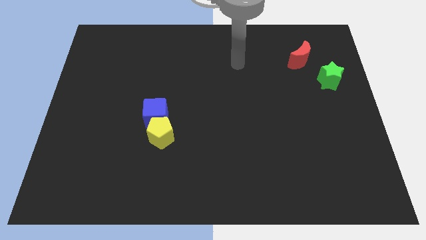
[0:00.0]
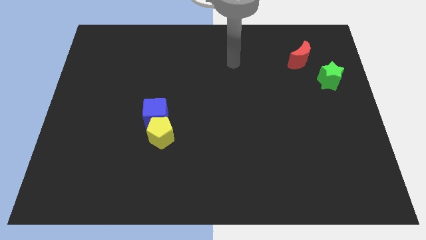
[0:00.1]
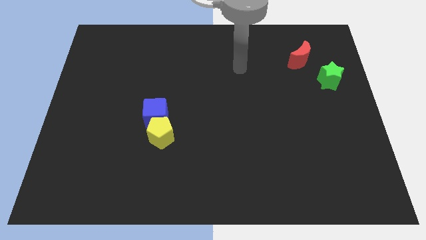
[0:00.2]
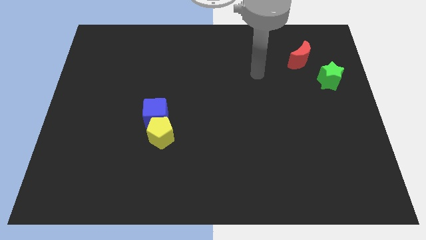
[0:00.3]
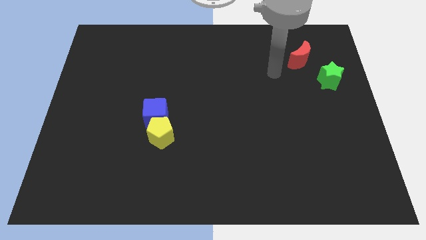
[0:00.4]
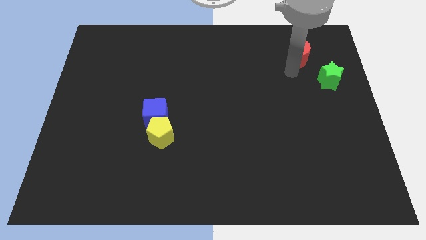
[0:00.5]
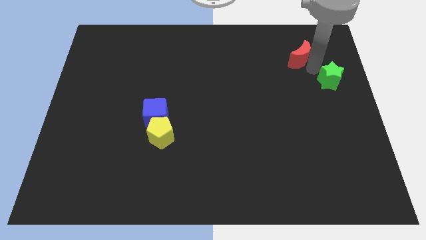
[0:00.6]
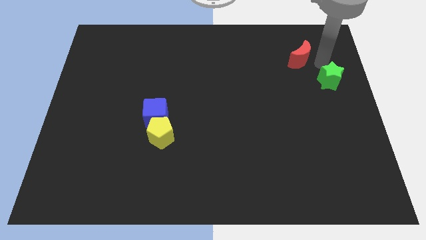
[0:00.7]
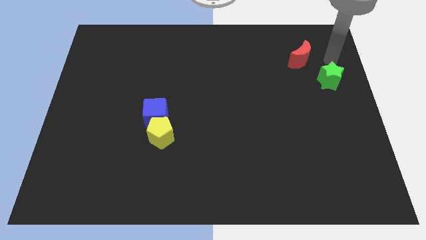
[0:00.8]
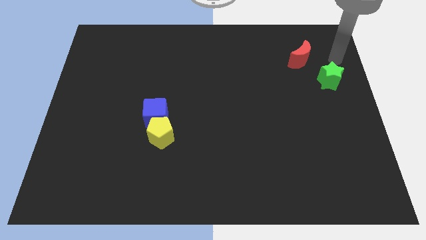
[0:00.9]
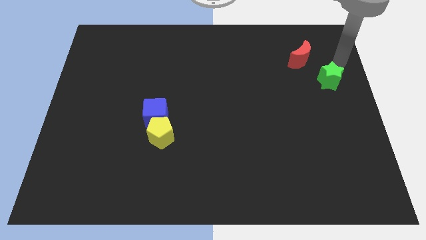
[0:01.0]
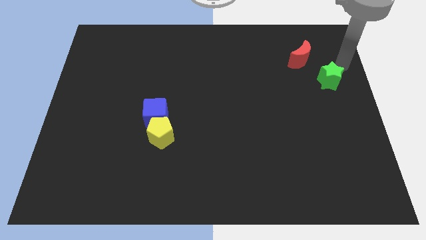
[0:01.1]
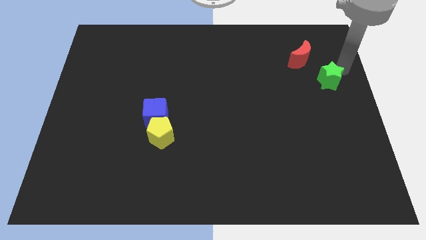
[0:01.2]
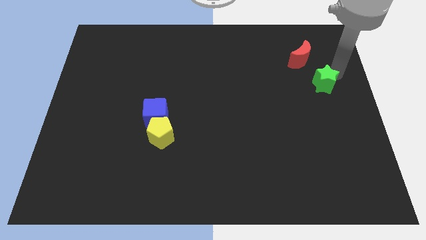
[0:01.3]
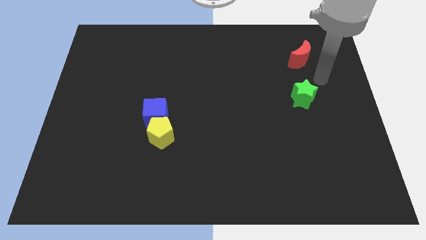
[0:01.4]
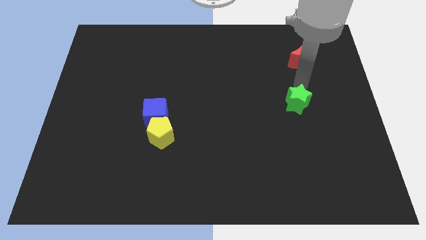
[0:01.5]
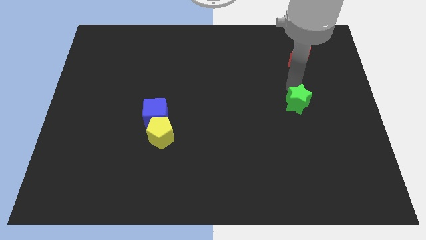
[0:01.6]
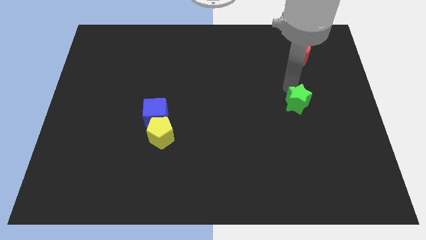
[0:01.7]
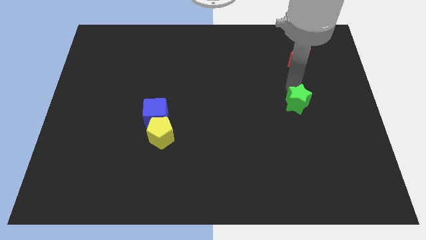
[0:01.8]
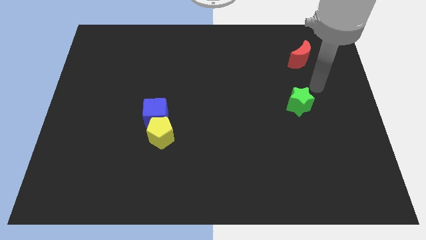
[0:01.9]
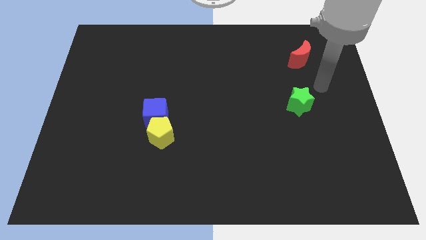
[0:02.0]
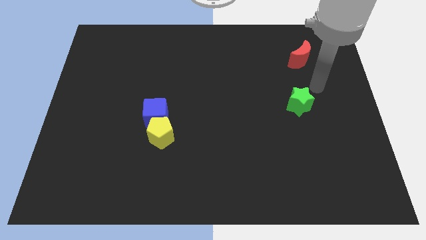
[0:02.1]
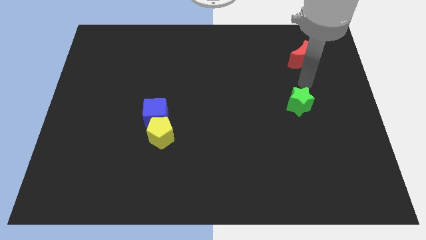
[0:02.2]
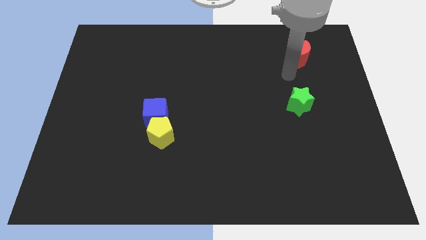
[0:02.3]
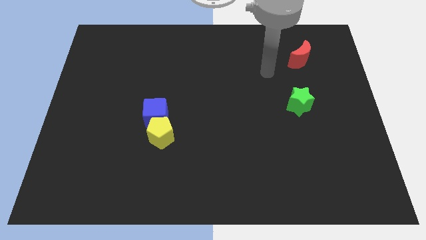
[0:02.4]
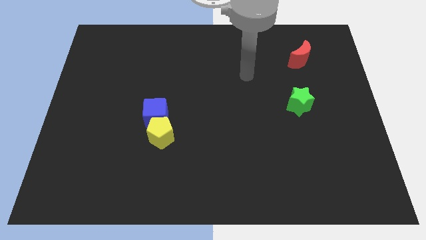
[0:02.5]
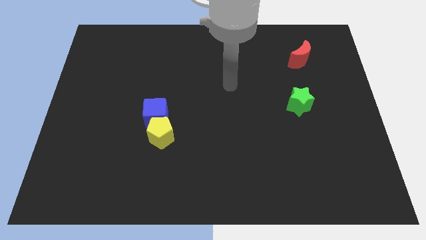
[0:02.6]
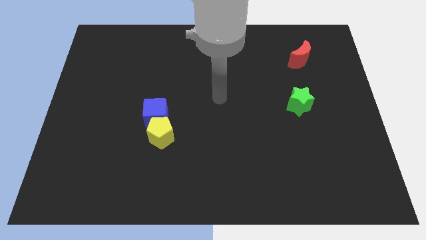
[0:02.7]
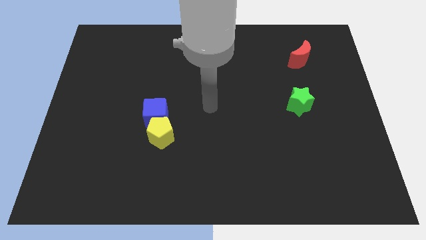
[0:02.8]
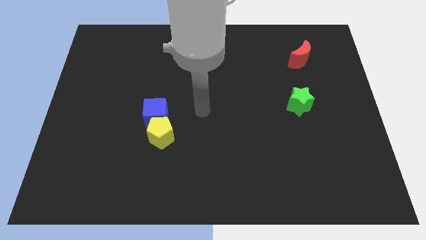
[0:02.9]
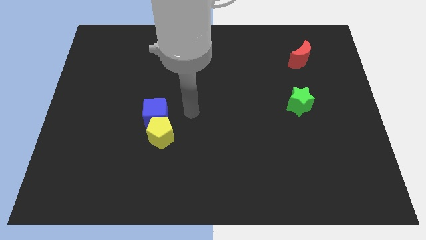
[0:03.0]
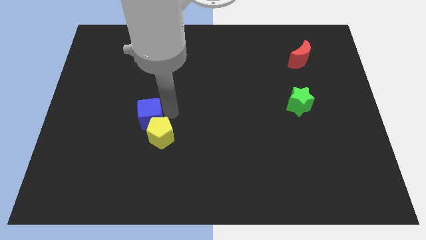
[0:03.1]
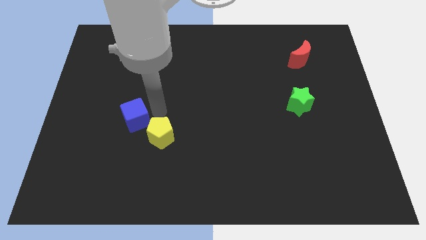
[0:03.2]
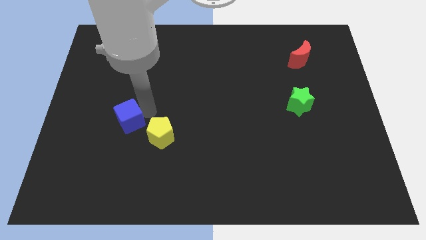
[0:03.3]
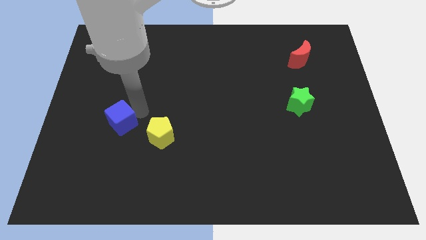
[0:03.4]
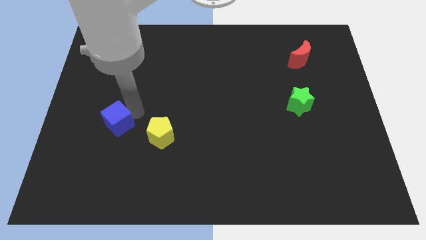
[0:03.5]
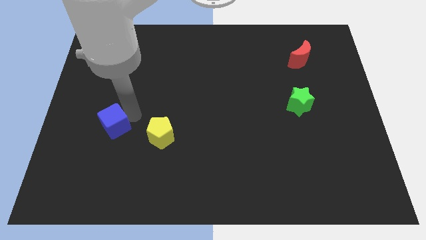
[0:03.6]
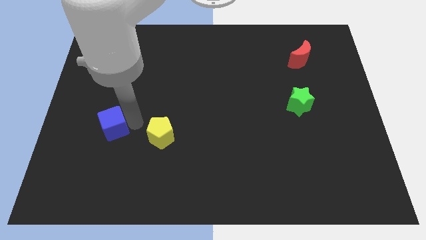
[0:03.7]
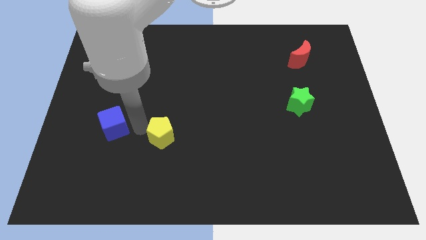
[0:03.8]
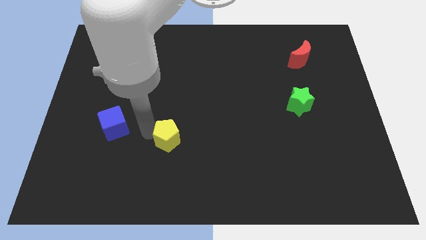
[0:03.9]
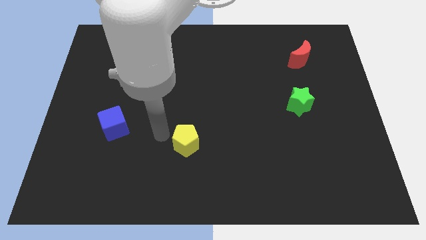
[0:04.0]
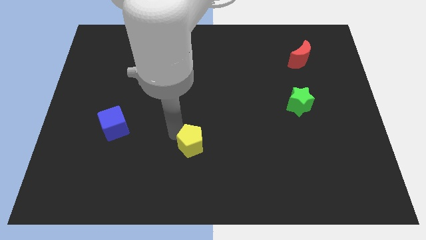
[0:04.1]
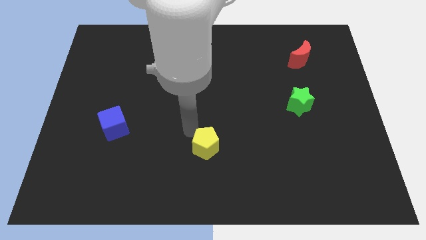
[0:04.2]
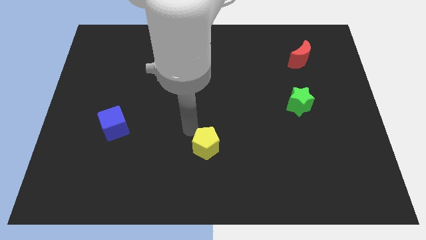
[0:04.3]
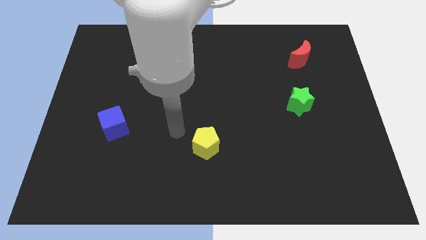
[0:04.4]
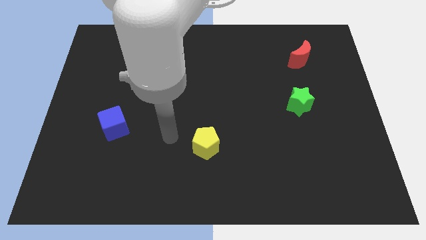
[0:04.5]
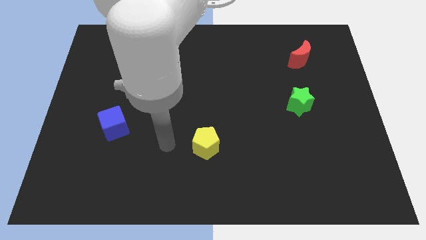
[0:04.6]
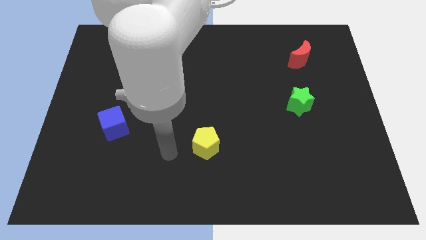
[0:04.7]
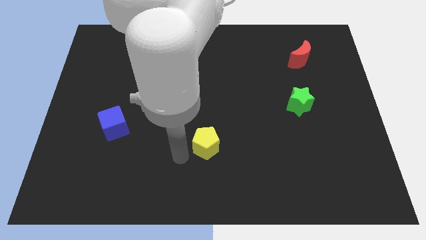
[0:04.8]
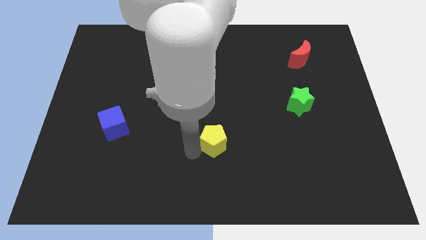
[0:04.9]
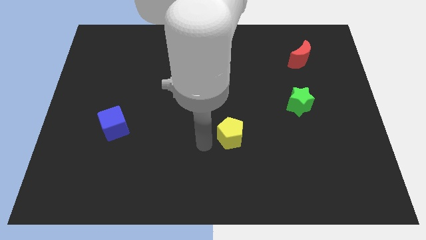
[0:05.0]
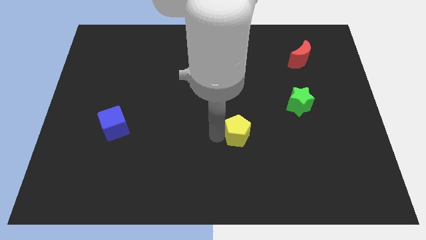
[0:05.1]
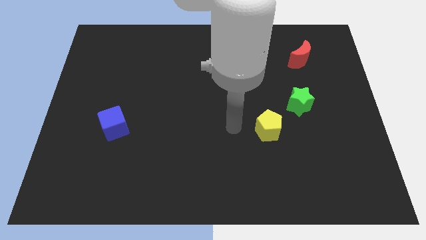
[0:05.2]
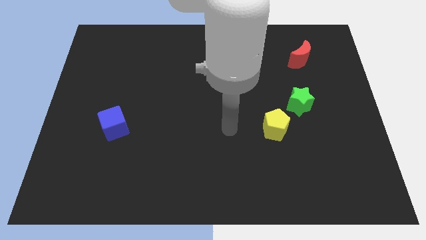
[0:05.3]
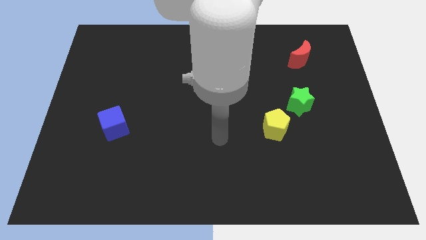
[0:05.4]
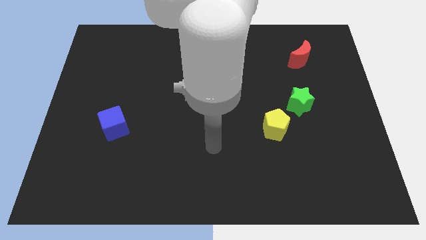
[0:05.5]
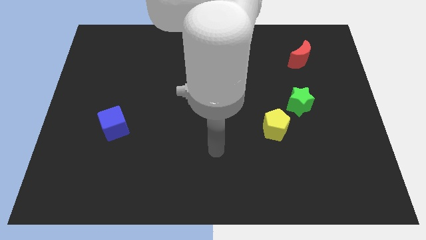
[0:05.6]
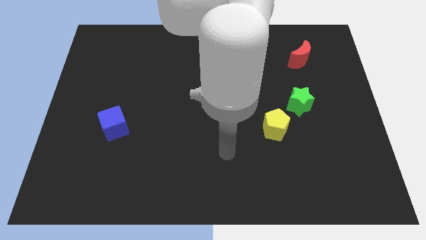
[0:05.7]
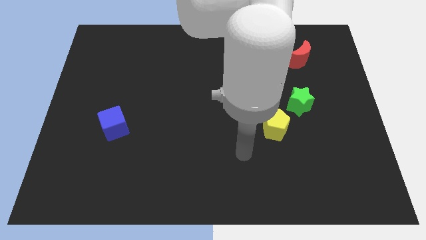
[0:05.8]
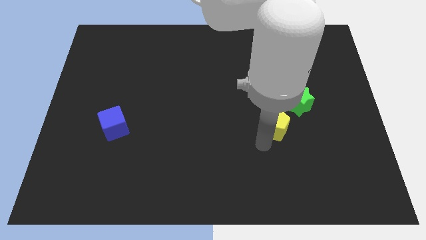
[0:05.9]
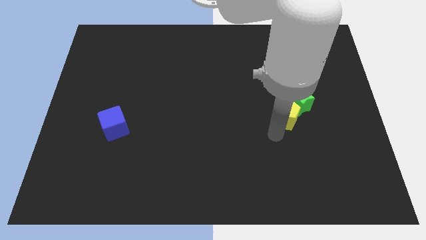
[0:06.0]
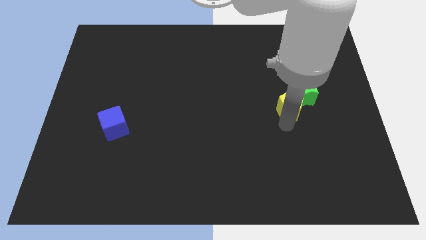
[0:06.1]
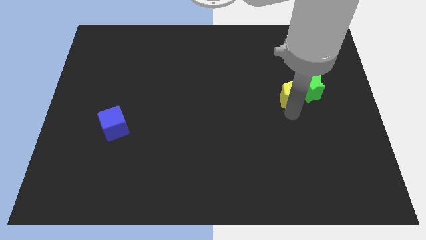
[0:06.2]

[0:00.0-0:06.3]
slide the yellow block close to the green block

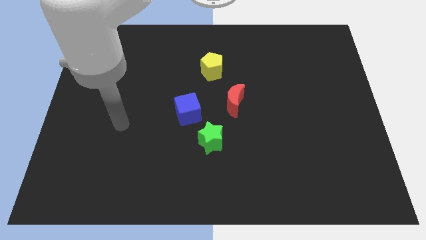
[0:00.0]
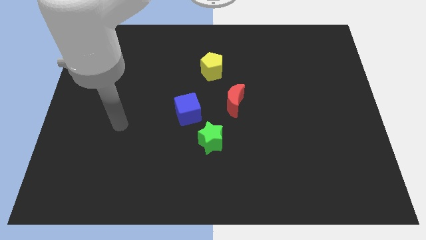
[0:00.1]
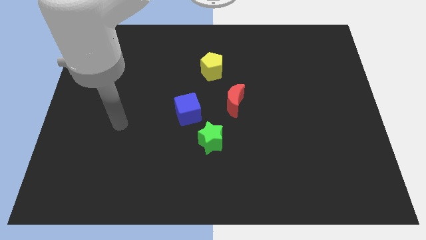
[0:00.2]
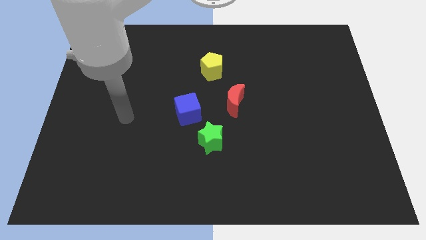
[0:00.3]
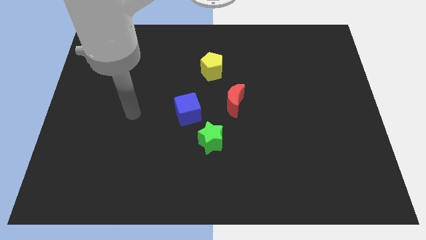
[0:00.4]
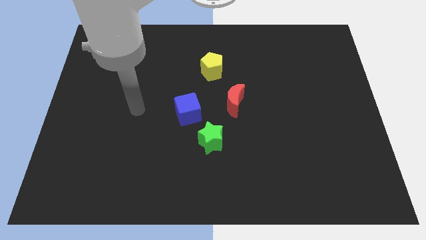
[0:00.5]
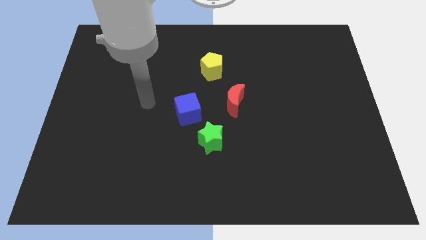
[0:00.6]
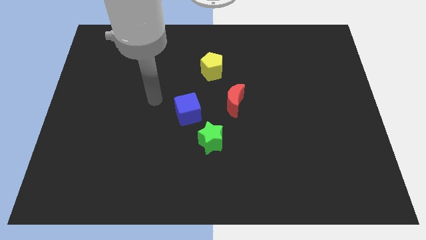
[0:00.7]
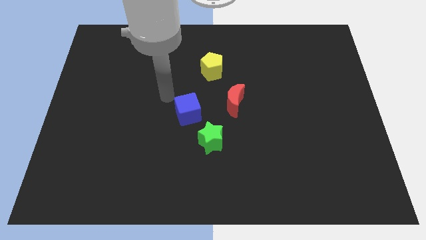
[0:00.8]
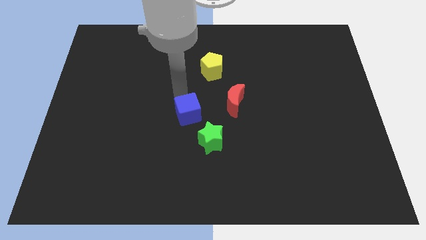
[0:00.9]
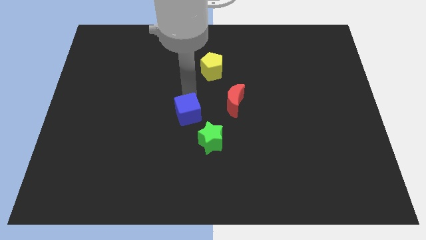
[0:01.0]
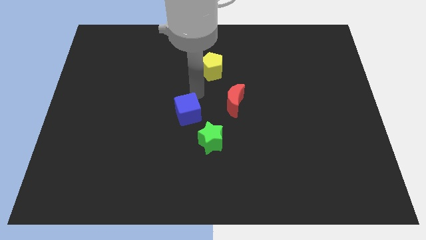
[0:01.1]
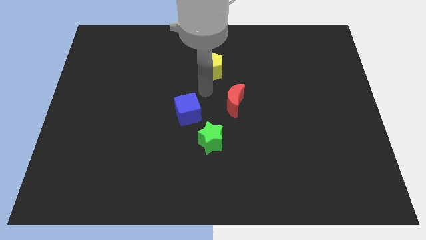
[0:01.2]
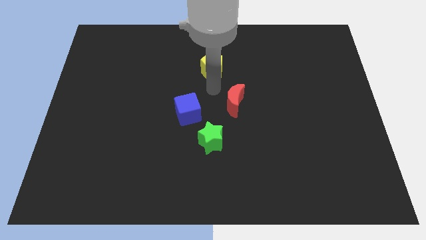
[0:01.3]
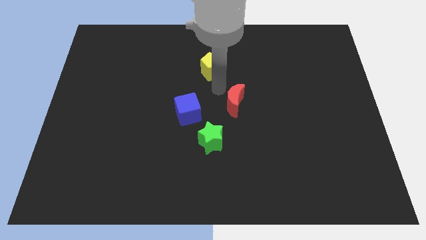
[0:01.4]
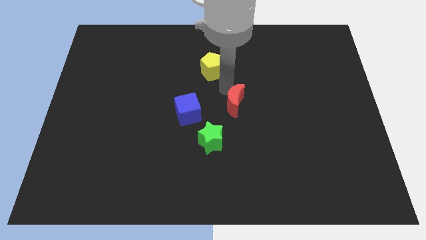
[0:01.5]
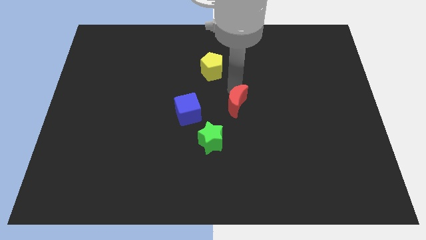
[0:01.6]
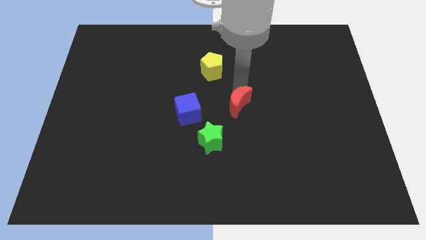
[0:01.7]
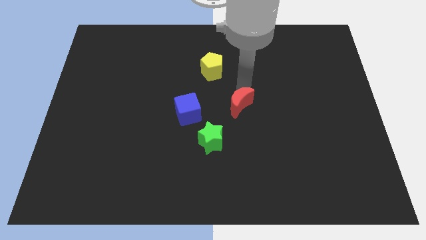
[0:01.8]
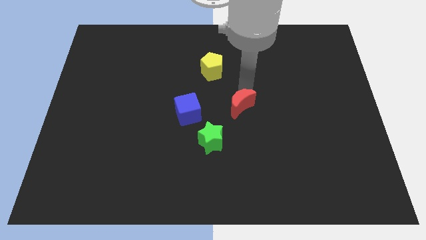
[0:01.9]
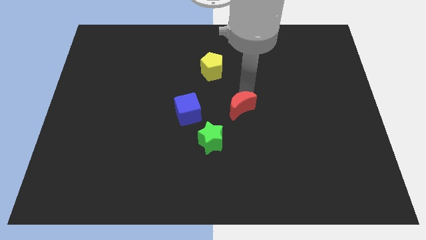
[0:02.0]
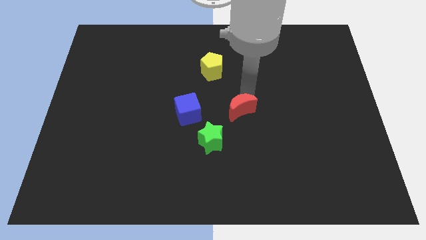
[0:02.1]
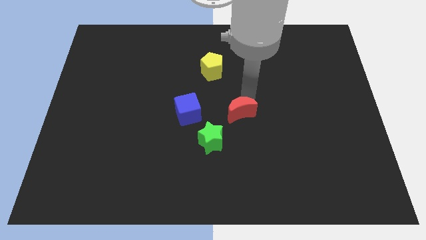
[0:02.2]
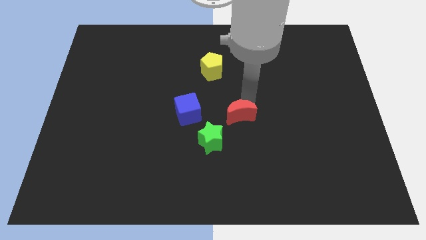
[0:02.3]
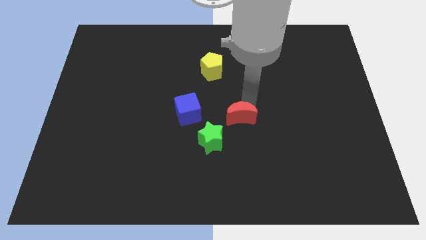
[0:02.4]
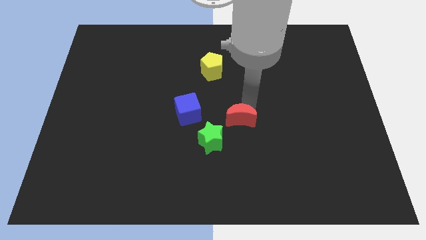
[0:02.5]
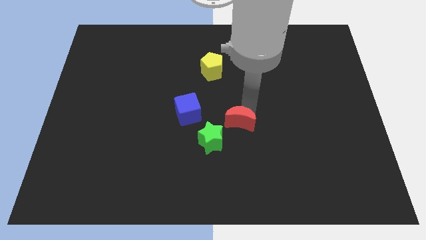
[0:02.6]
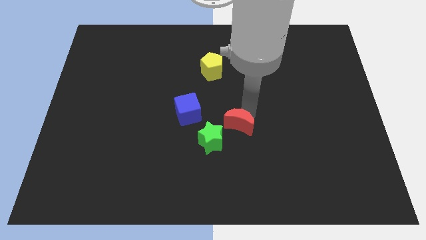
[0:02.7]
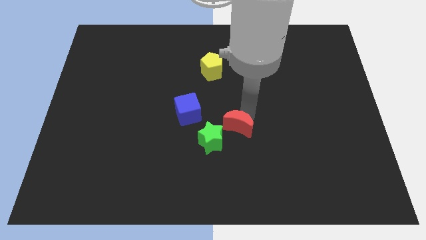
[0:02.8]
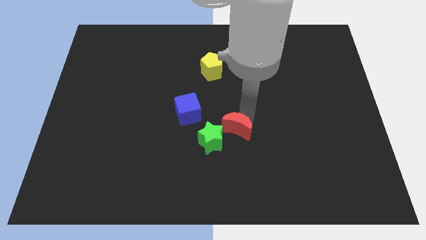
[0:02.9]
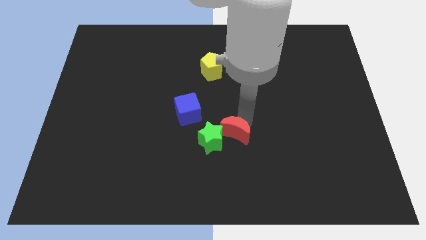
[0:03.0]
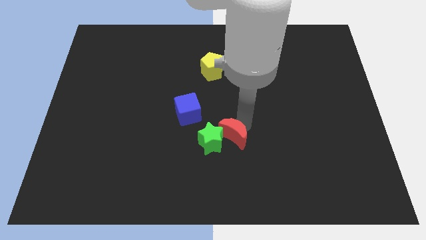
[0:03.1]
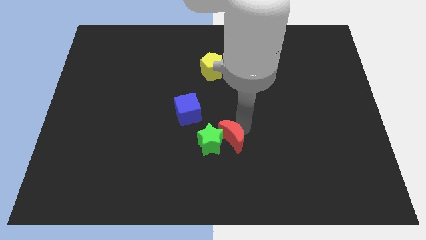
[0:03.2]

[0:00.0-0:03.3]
slide the red moon to the star
